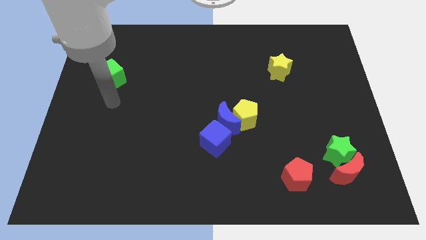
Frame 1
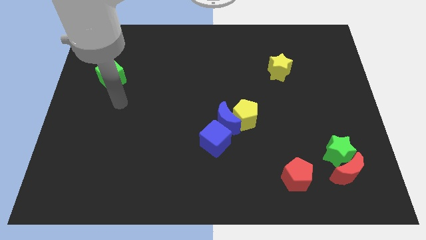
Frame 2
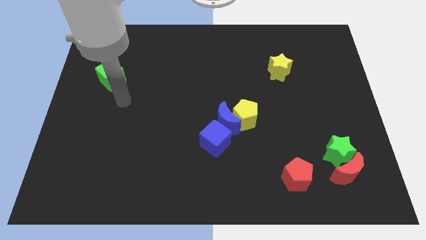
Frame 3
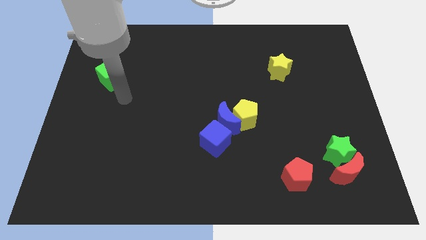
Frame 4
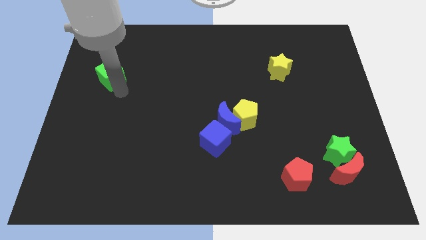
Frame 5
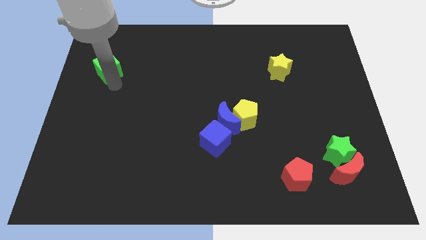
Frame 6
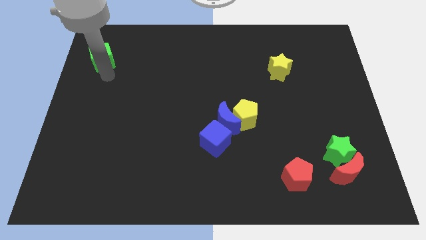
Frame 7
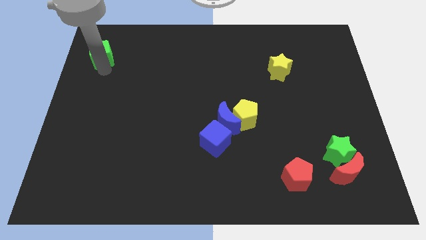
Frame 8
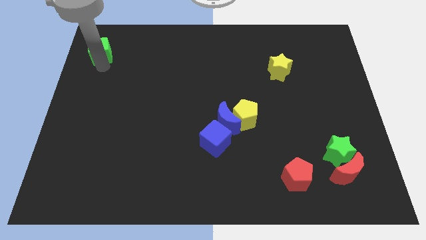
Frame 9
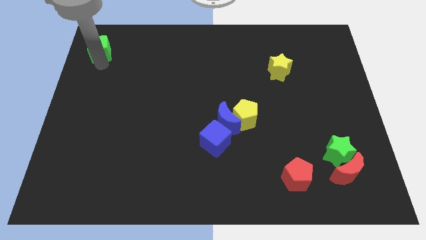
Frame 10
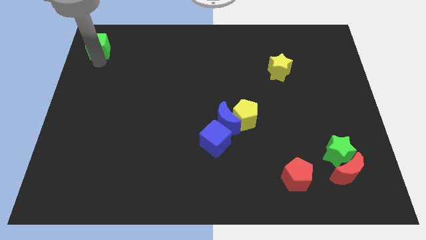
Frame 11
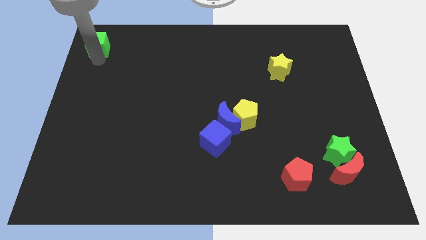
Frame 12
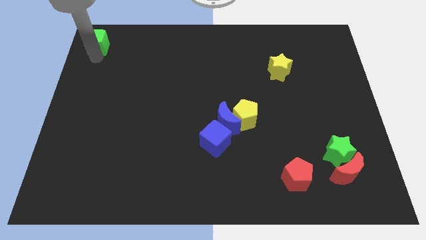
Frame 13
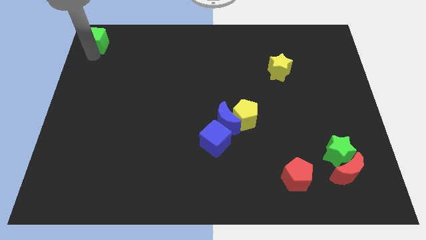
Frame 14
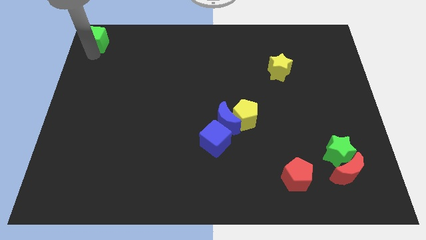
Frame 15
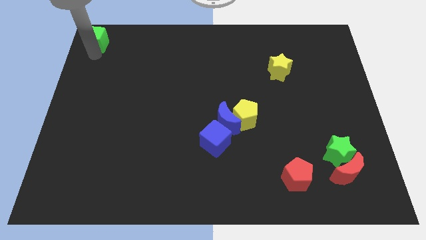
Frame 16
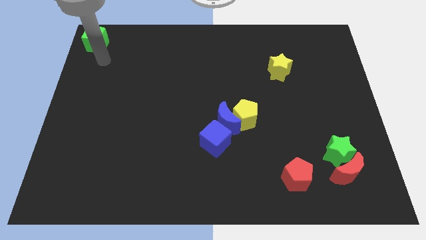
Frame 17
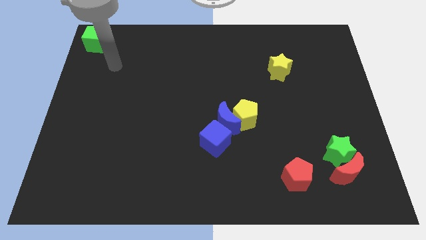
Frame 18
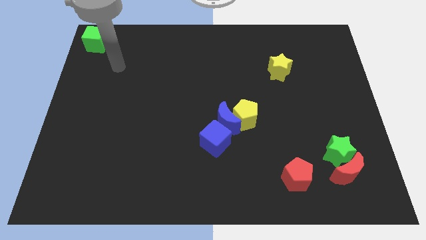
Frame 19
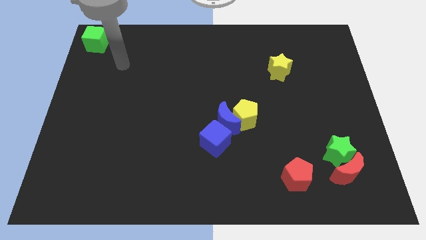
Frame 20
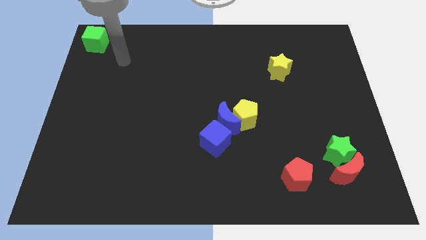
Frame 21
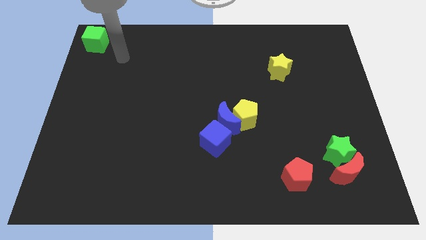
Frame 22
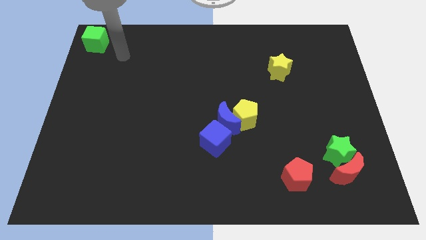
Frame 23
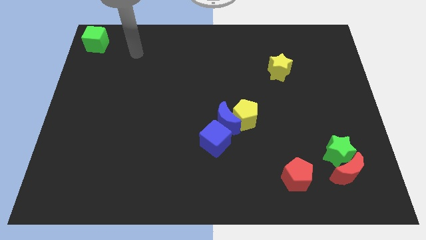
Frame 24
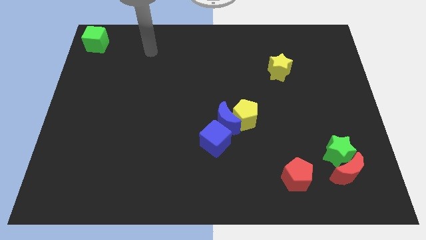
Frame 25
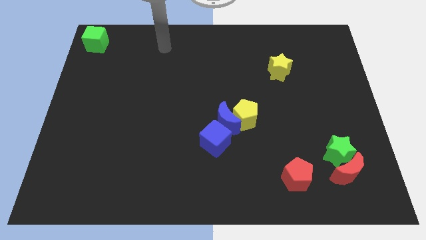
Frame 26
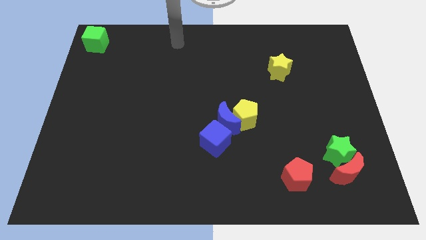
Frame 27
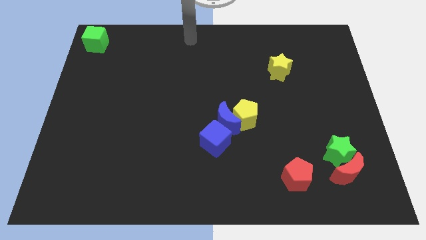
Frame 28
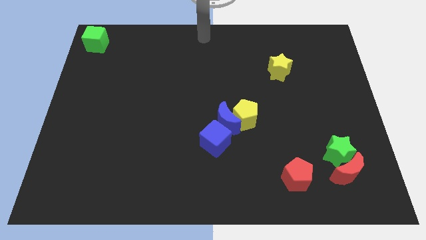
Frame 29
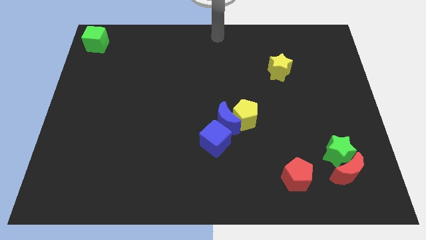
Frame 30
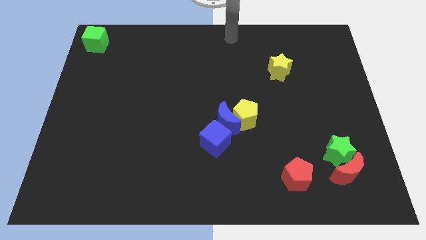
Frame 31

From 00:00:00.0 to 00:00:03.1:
put the green cube at the top left of the board

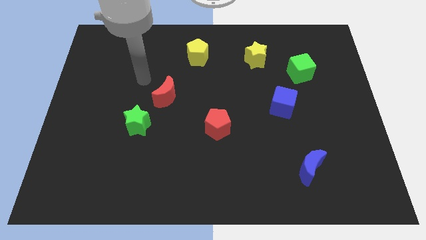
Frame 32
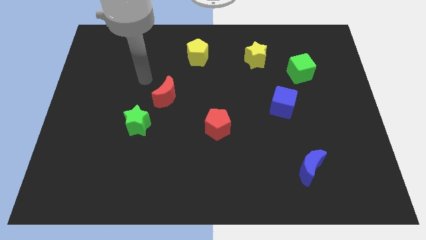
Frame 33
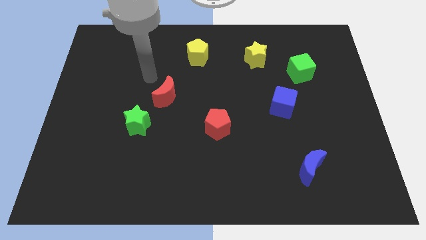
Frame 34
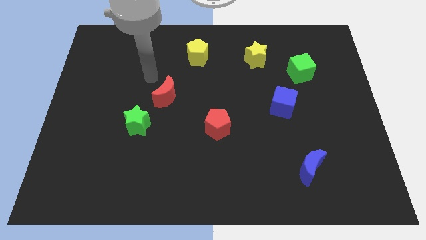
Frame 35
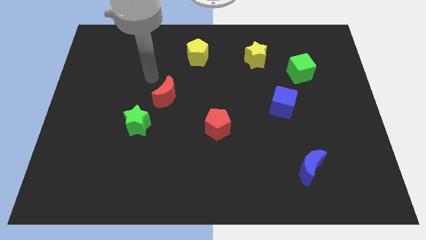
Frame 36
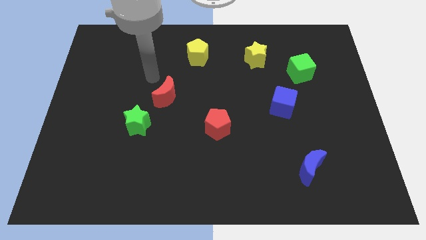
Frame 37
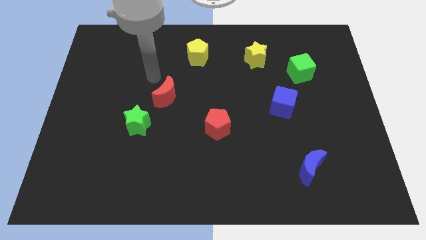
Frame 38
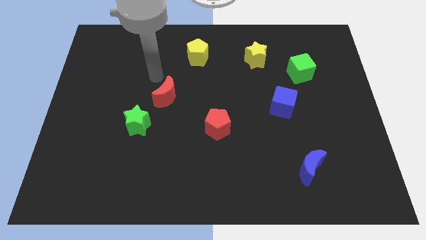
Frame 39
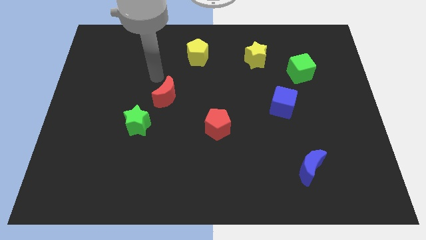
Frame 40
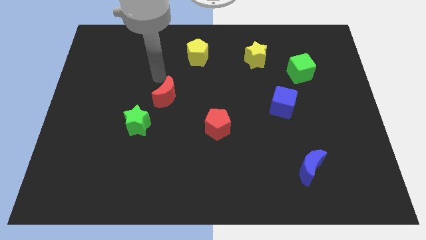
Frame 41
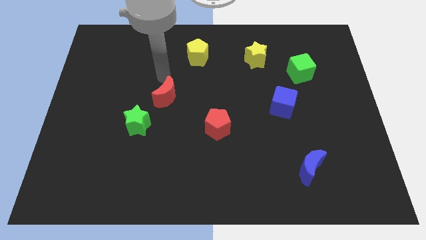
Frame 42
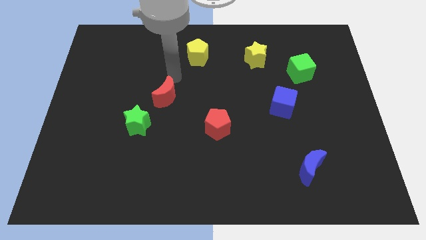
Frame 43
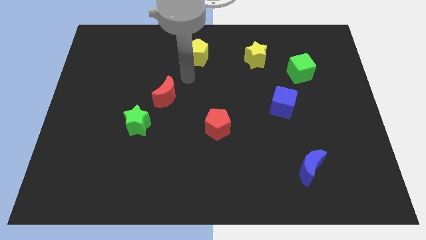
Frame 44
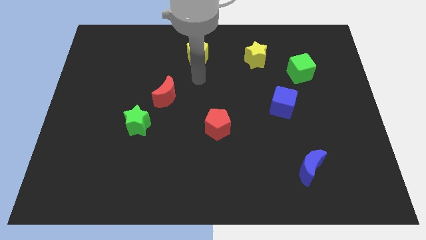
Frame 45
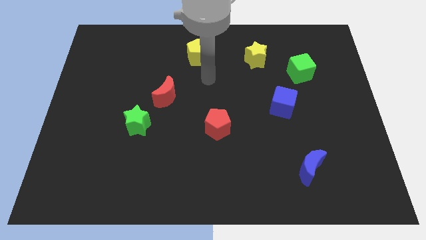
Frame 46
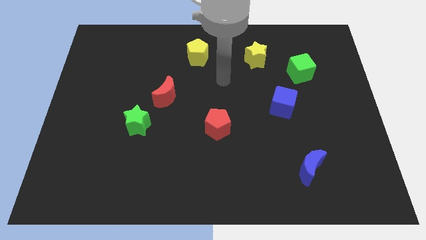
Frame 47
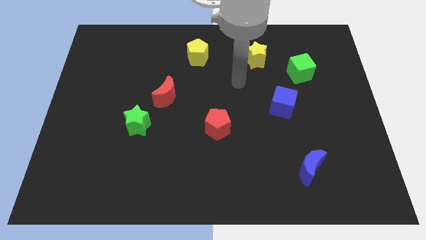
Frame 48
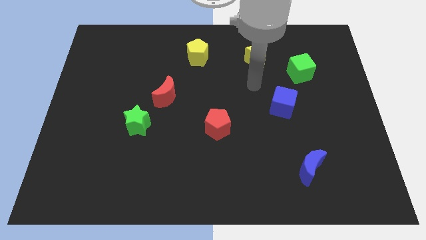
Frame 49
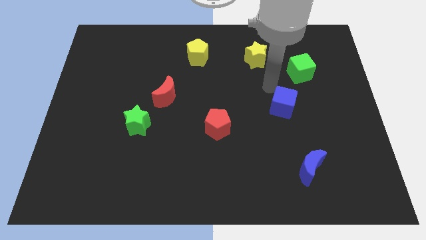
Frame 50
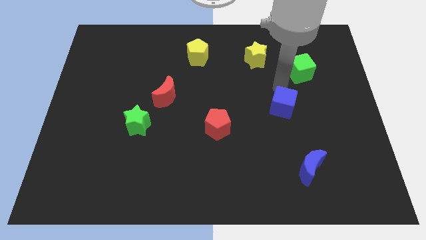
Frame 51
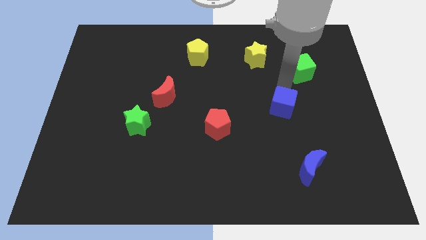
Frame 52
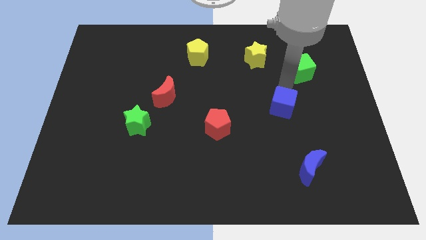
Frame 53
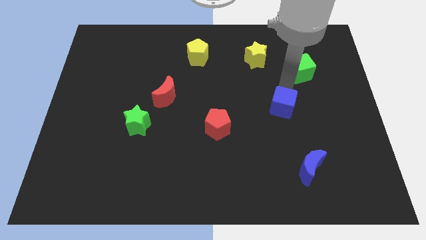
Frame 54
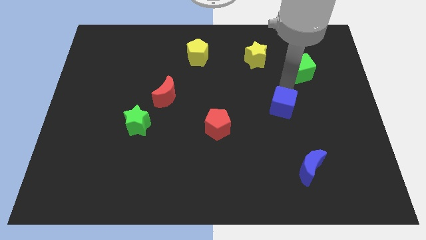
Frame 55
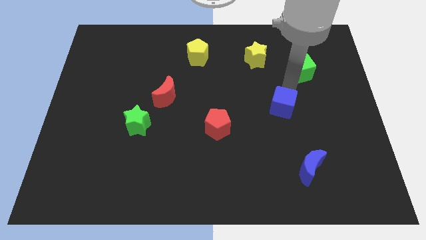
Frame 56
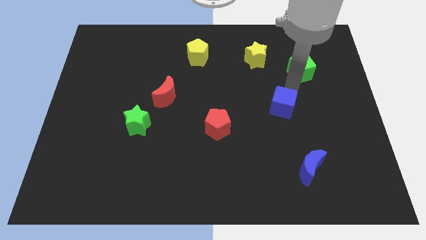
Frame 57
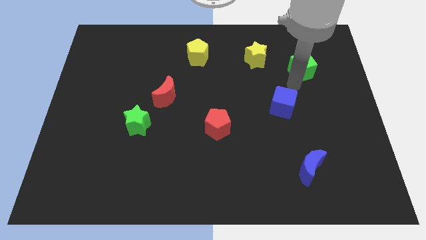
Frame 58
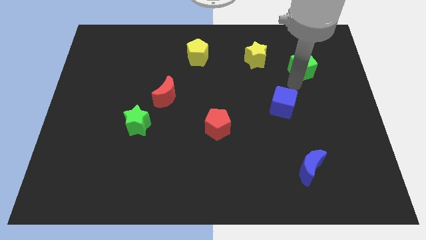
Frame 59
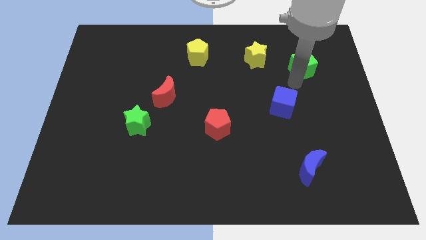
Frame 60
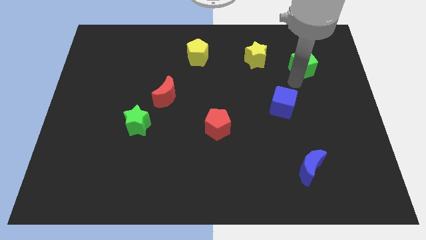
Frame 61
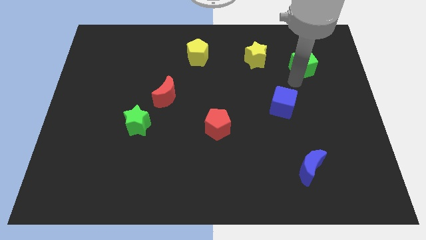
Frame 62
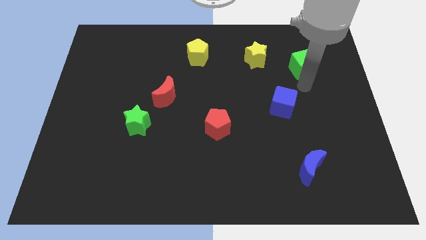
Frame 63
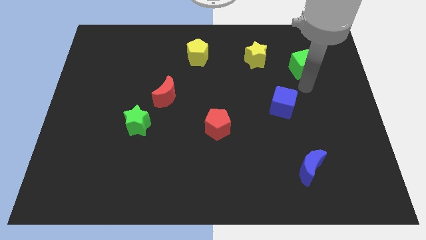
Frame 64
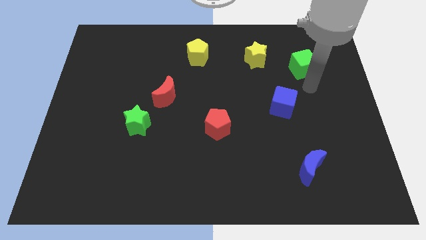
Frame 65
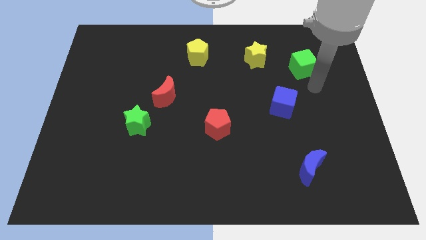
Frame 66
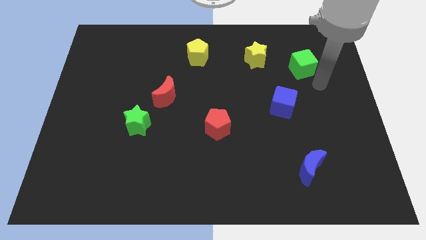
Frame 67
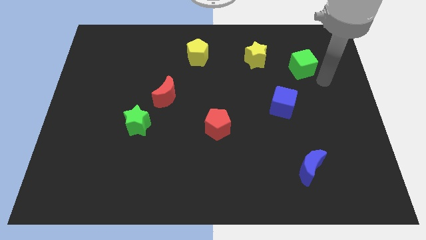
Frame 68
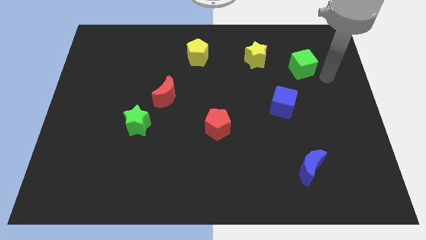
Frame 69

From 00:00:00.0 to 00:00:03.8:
slightly push green cube towards top of the board

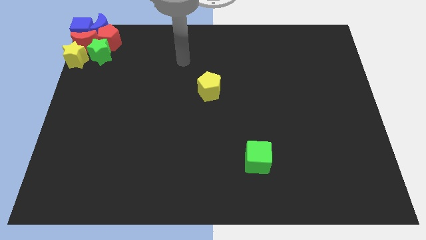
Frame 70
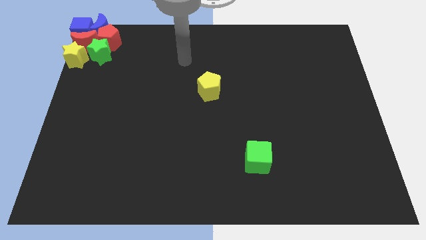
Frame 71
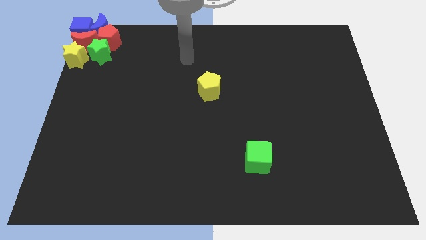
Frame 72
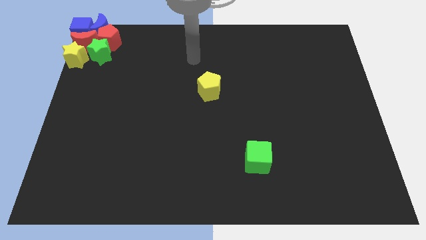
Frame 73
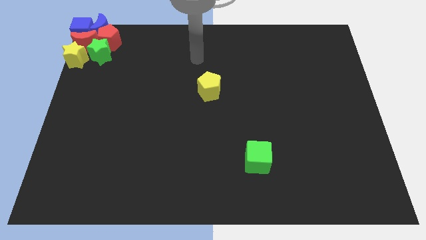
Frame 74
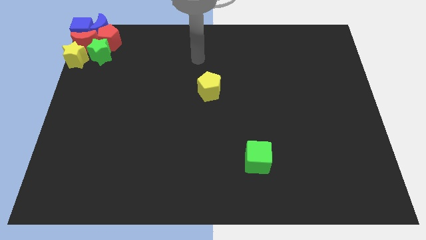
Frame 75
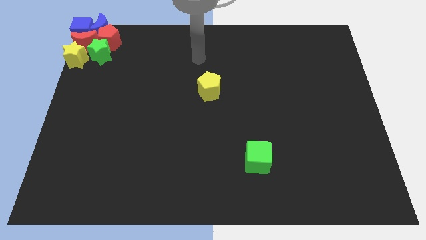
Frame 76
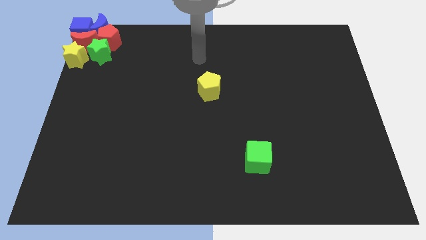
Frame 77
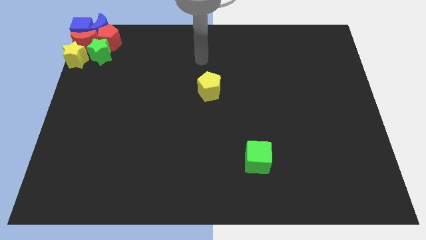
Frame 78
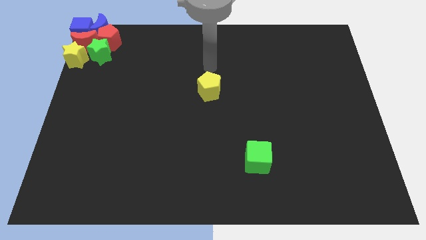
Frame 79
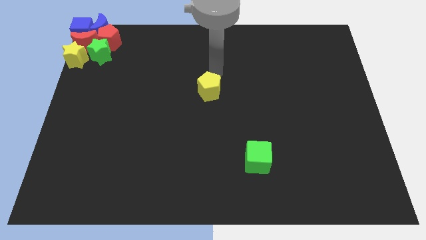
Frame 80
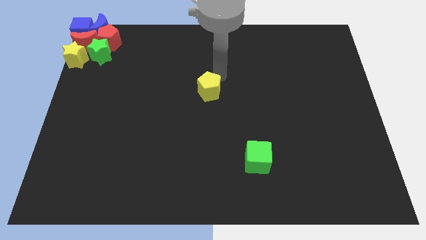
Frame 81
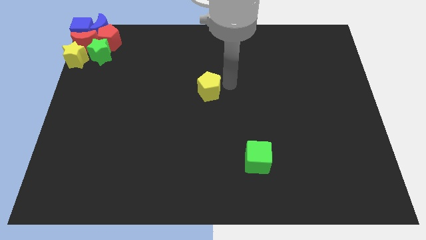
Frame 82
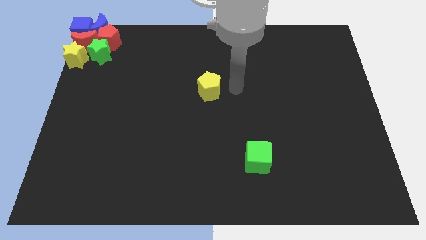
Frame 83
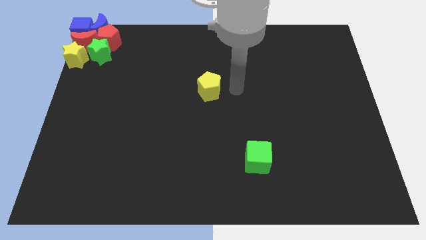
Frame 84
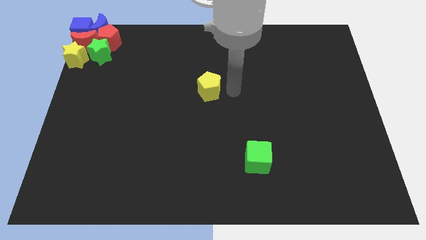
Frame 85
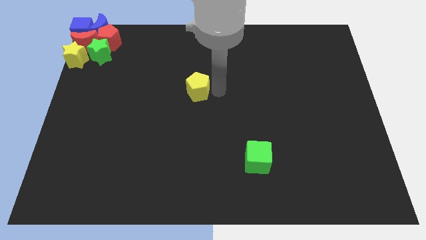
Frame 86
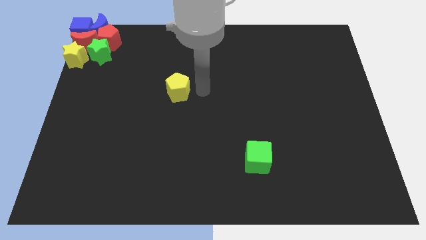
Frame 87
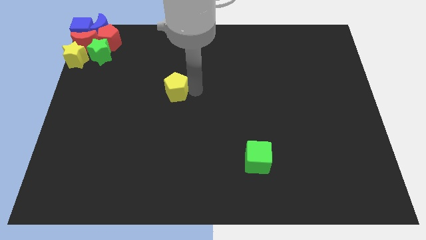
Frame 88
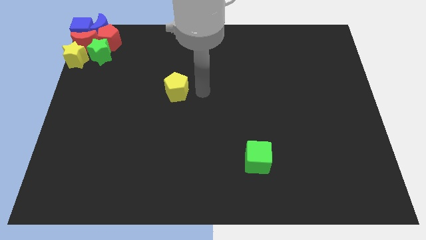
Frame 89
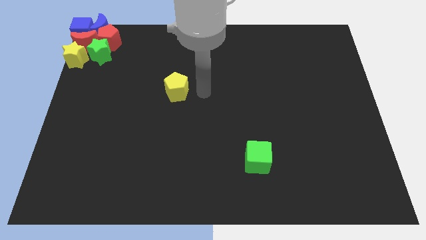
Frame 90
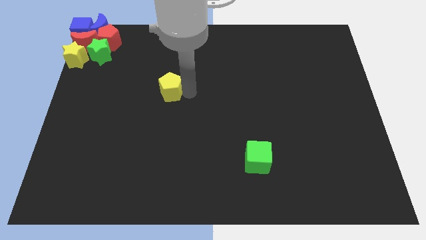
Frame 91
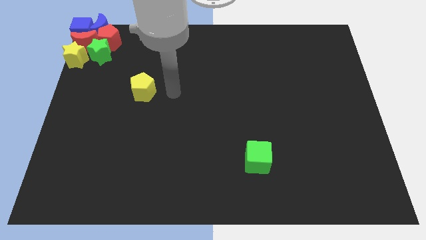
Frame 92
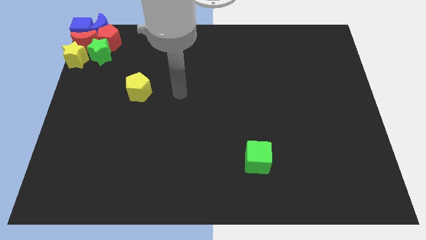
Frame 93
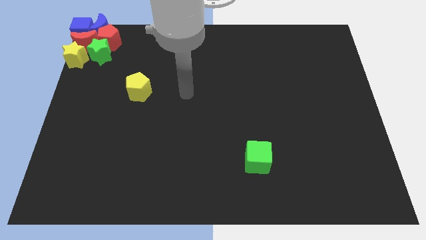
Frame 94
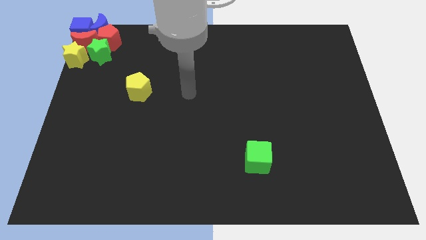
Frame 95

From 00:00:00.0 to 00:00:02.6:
push the yellow pentagon to the center left
